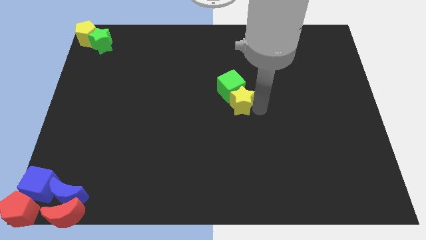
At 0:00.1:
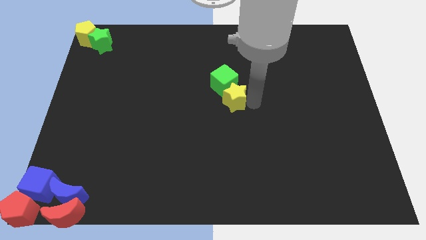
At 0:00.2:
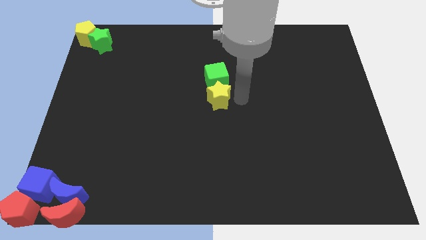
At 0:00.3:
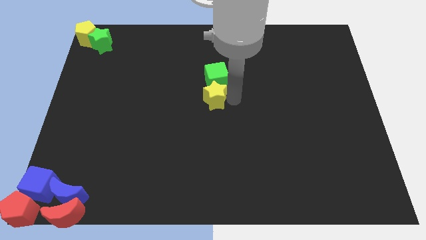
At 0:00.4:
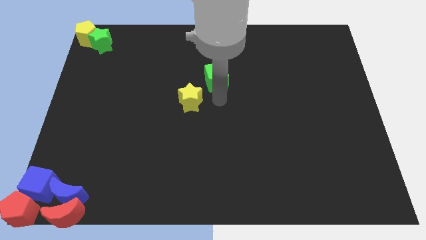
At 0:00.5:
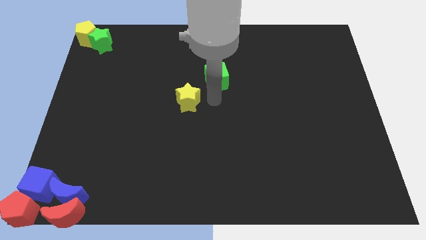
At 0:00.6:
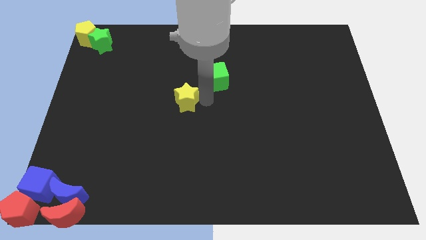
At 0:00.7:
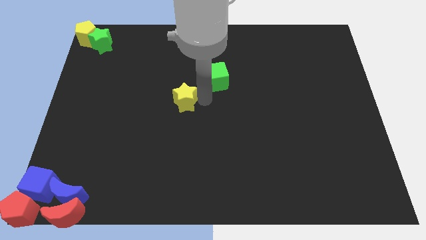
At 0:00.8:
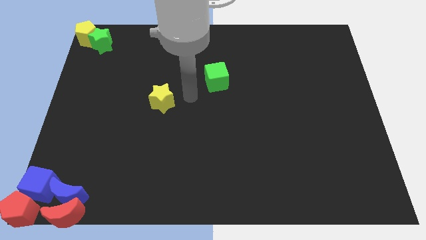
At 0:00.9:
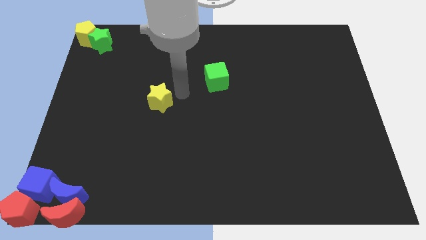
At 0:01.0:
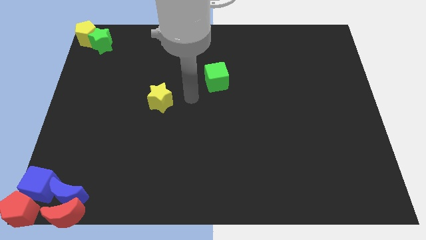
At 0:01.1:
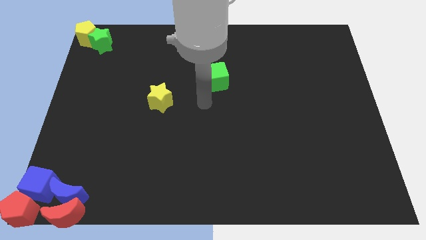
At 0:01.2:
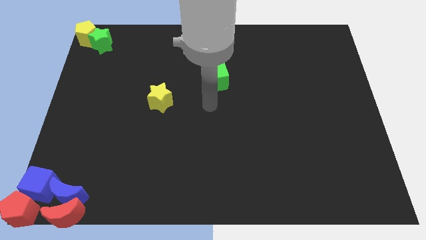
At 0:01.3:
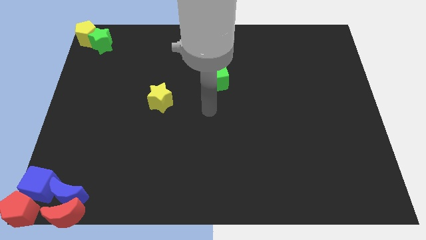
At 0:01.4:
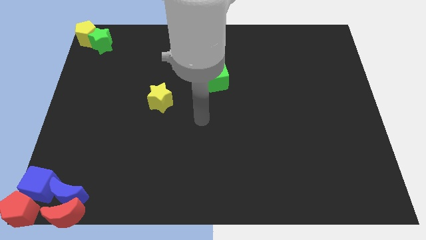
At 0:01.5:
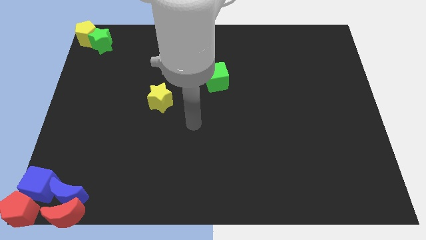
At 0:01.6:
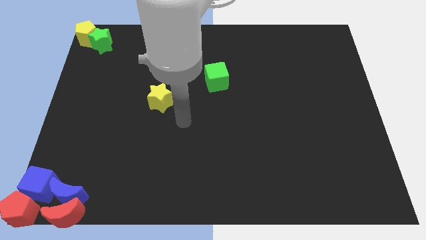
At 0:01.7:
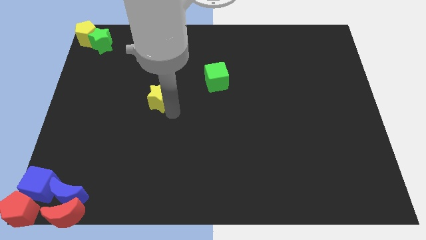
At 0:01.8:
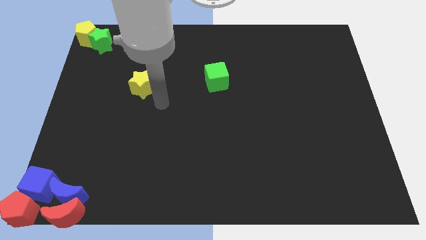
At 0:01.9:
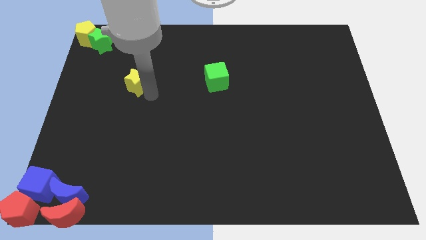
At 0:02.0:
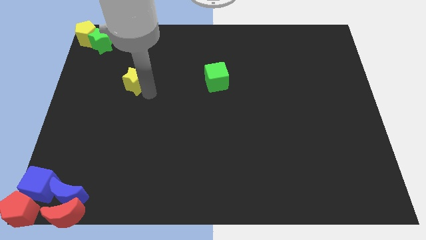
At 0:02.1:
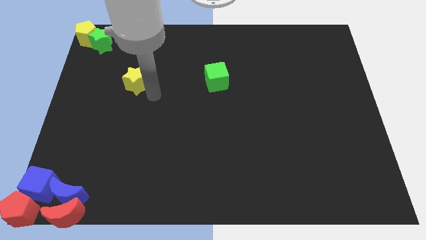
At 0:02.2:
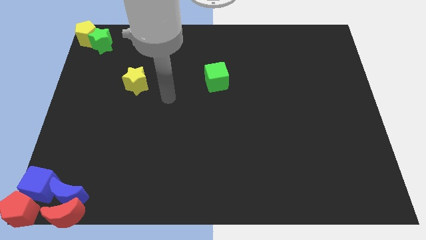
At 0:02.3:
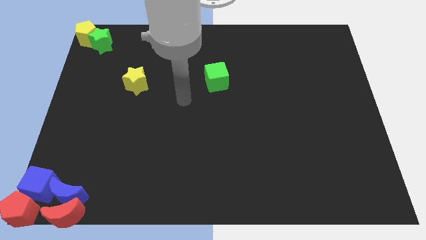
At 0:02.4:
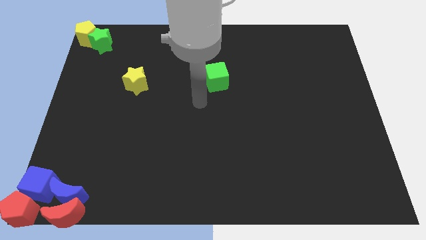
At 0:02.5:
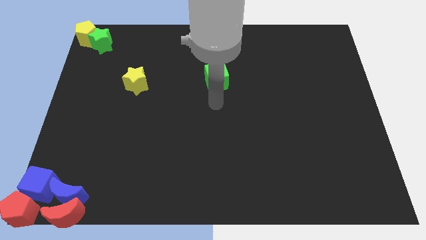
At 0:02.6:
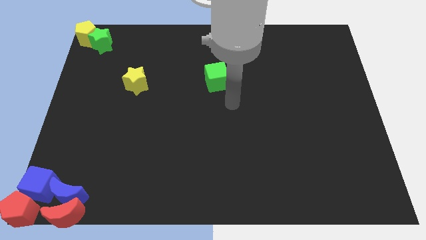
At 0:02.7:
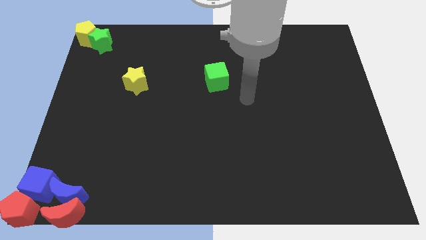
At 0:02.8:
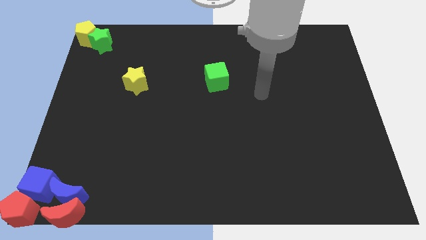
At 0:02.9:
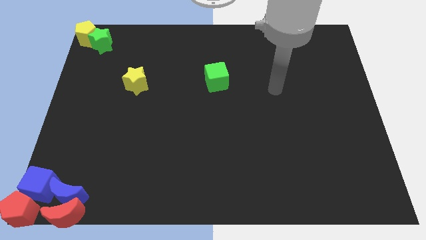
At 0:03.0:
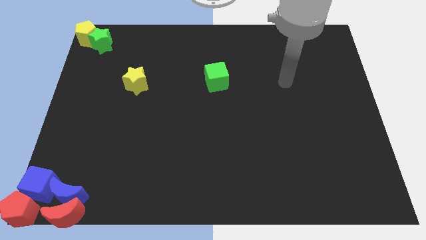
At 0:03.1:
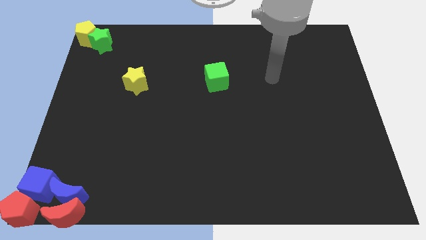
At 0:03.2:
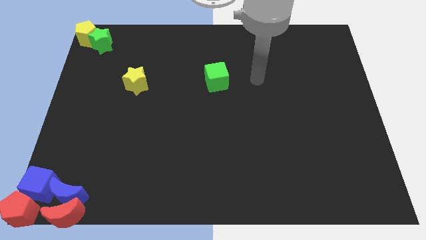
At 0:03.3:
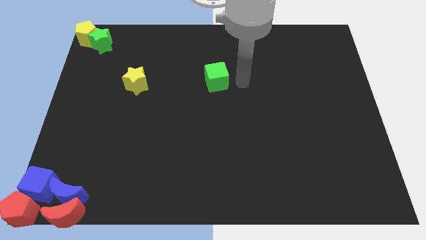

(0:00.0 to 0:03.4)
separate the yellow star from the green cube

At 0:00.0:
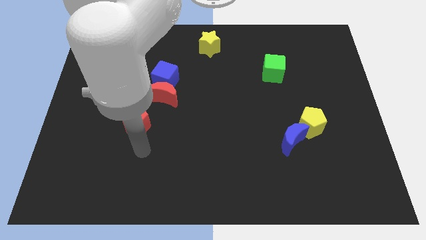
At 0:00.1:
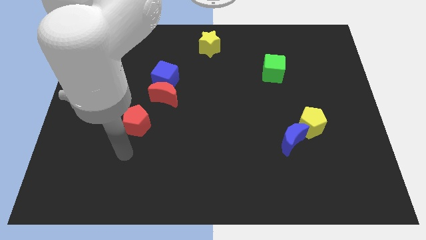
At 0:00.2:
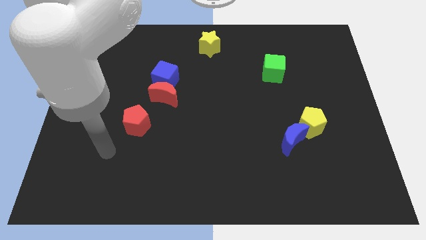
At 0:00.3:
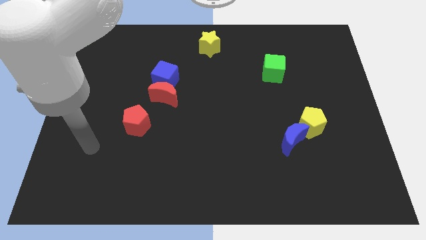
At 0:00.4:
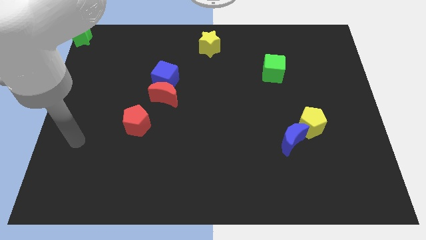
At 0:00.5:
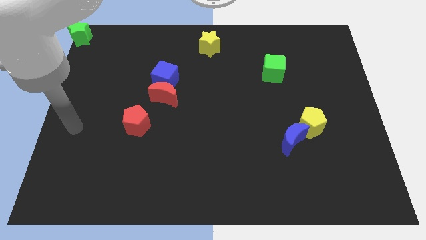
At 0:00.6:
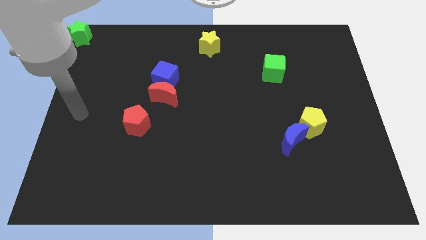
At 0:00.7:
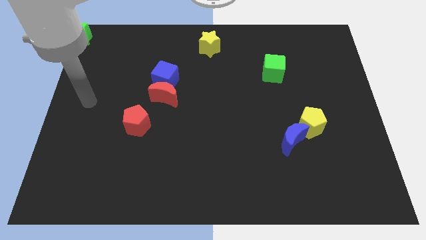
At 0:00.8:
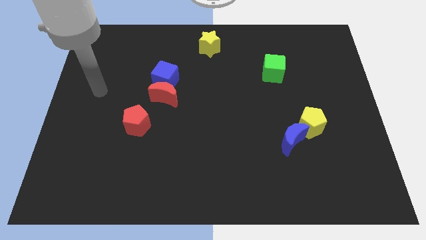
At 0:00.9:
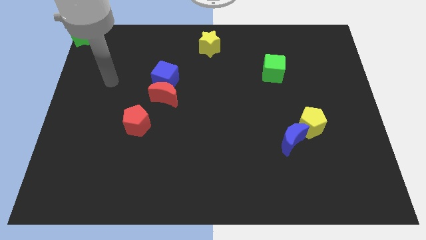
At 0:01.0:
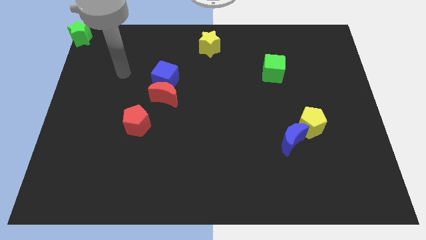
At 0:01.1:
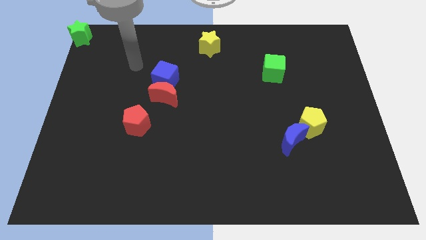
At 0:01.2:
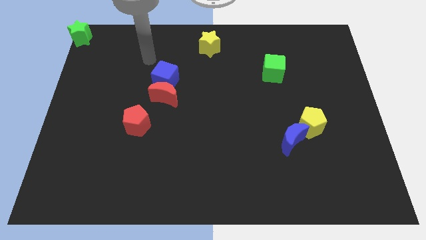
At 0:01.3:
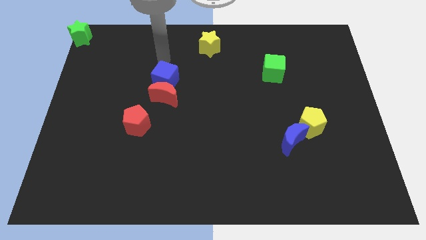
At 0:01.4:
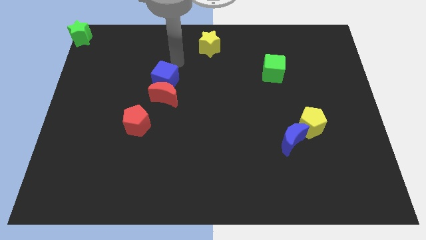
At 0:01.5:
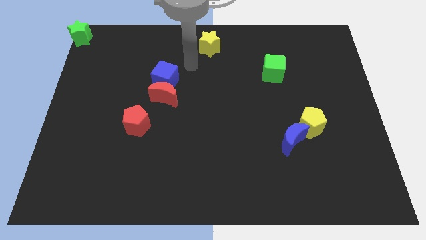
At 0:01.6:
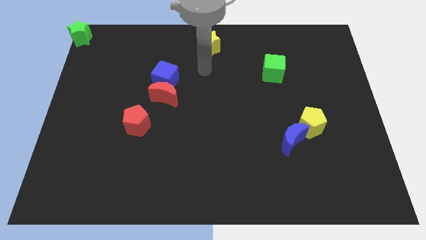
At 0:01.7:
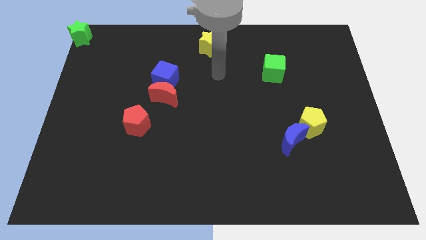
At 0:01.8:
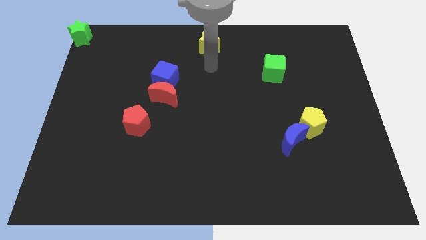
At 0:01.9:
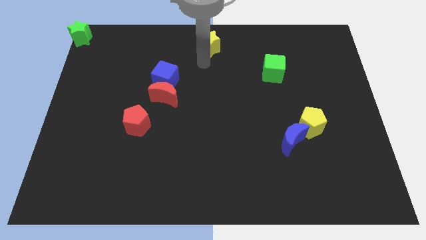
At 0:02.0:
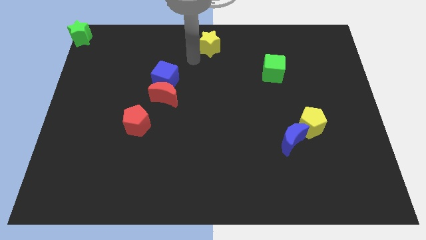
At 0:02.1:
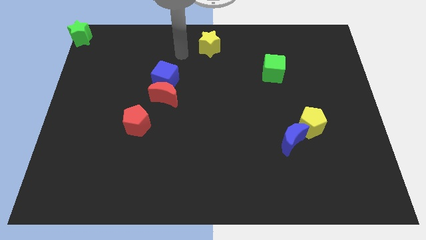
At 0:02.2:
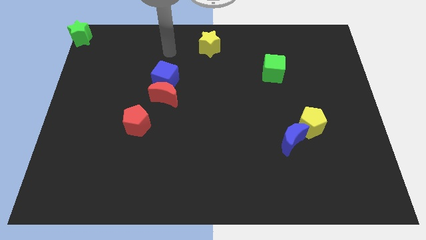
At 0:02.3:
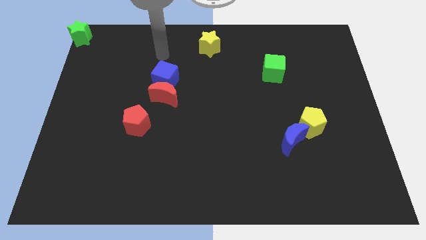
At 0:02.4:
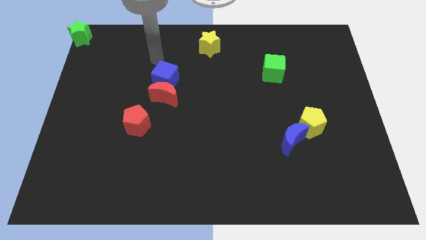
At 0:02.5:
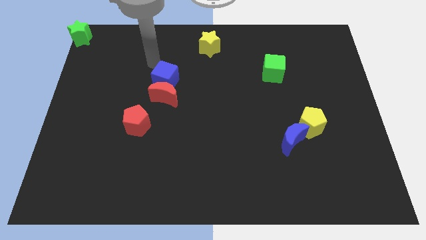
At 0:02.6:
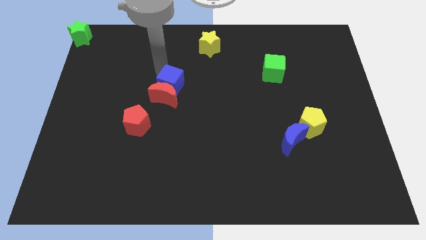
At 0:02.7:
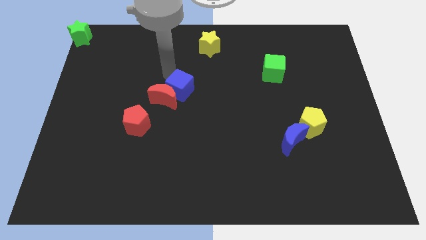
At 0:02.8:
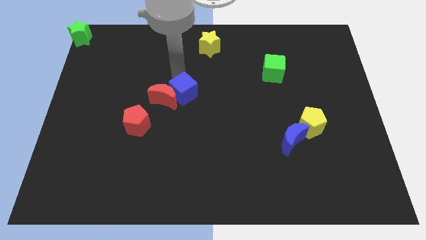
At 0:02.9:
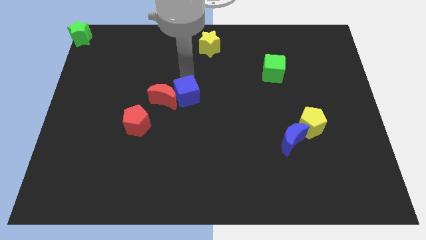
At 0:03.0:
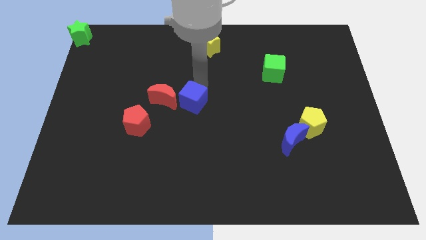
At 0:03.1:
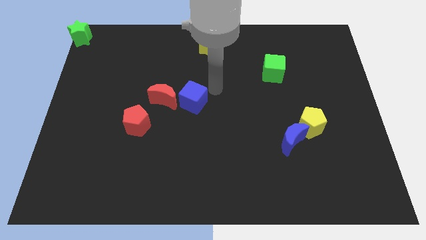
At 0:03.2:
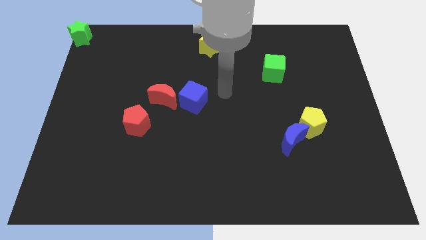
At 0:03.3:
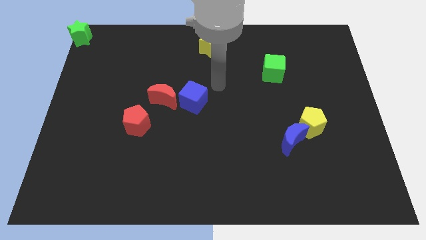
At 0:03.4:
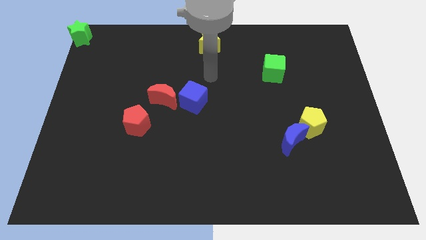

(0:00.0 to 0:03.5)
move the blue cube to the right of the red moon

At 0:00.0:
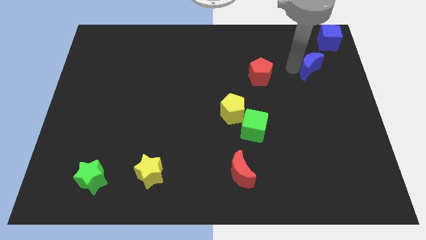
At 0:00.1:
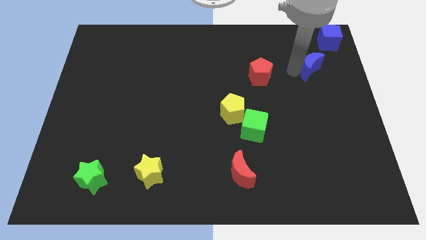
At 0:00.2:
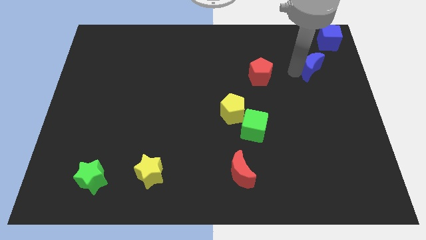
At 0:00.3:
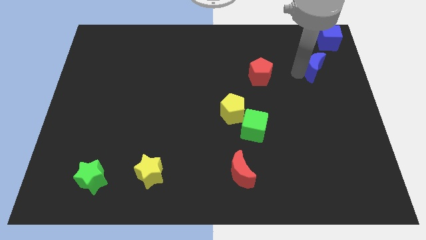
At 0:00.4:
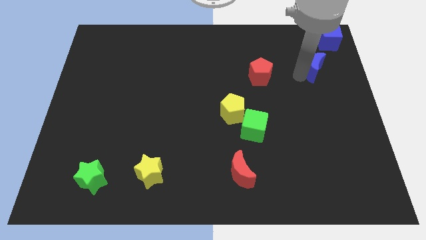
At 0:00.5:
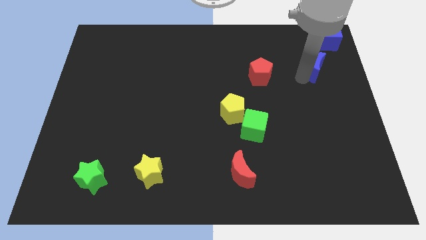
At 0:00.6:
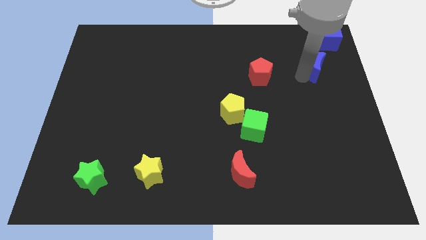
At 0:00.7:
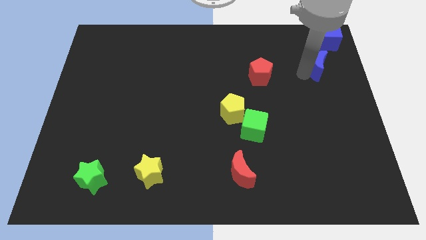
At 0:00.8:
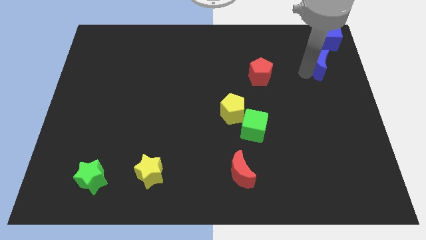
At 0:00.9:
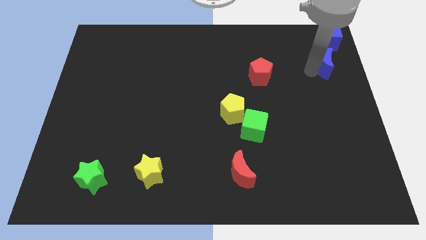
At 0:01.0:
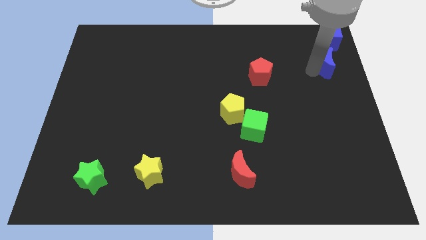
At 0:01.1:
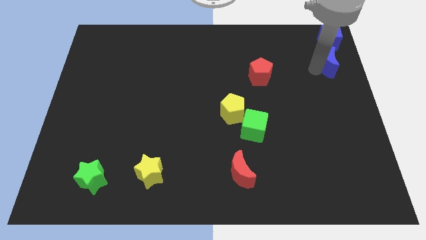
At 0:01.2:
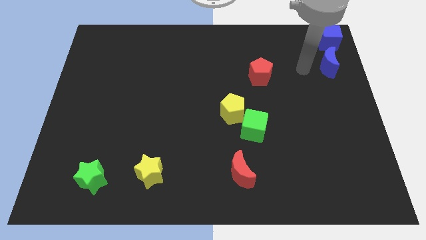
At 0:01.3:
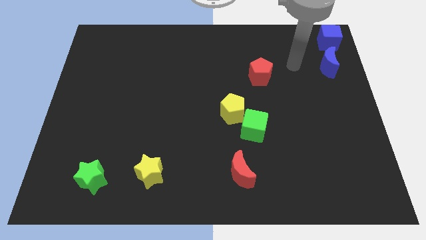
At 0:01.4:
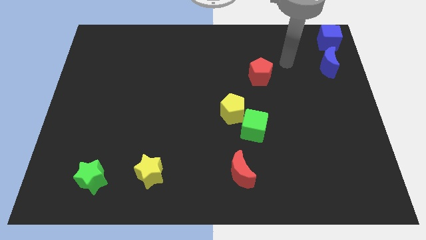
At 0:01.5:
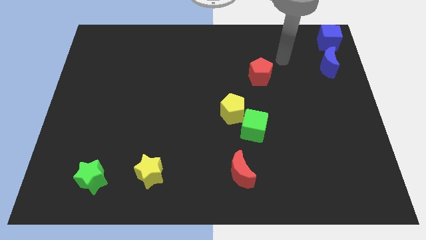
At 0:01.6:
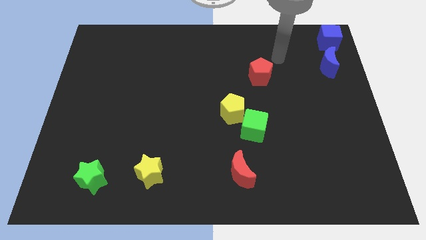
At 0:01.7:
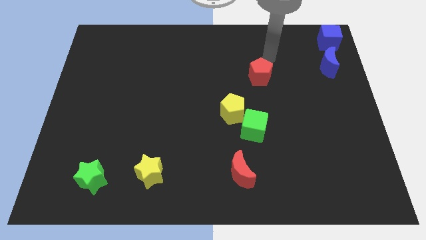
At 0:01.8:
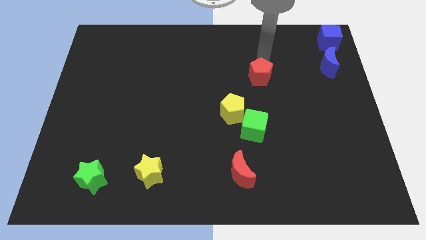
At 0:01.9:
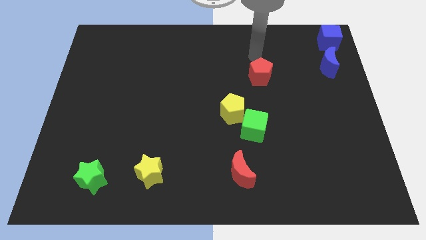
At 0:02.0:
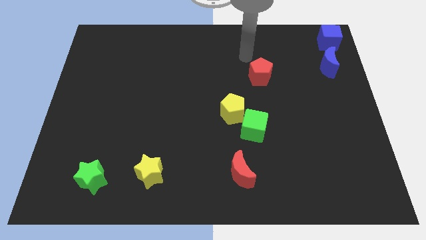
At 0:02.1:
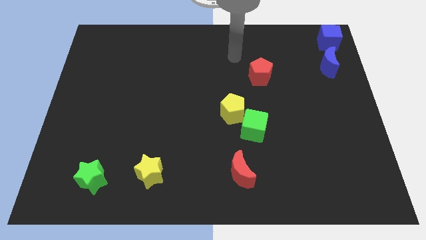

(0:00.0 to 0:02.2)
move the blue moon below the blue cube
